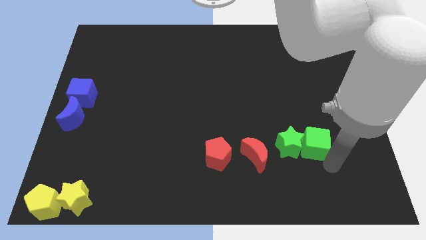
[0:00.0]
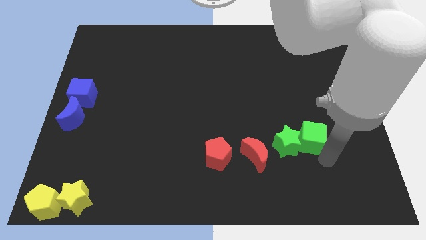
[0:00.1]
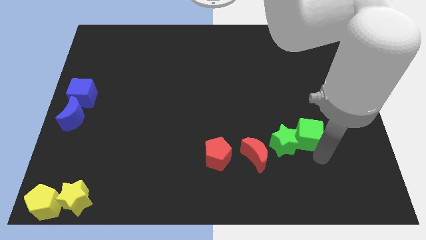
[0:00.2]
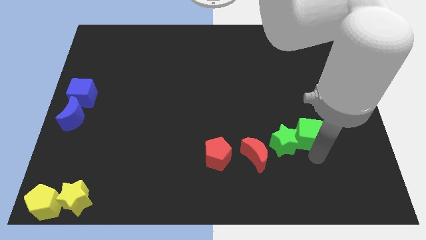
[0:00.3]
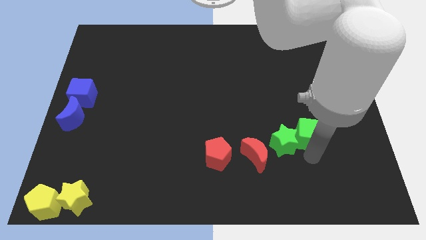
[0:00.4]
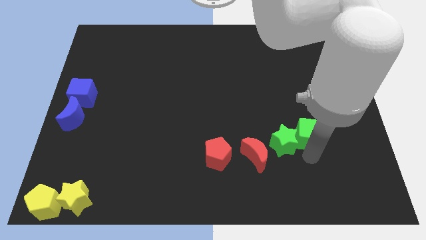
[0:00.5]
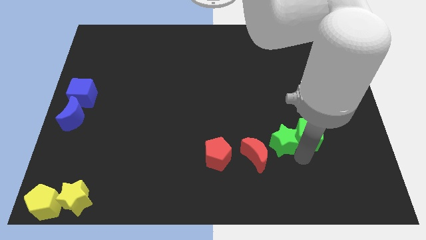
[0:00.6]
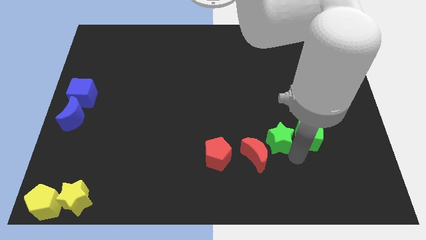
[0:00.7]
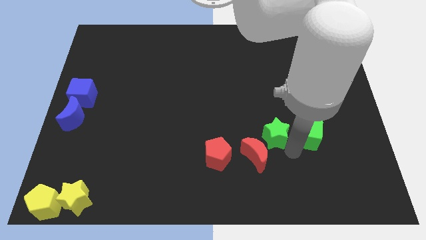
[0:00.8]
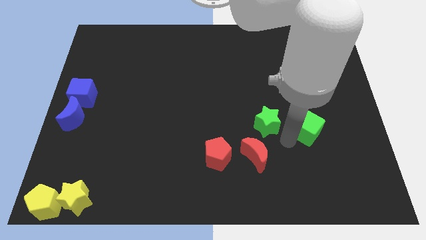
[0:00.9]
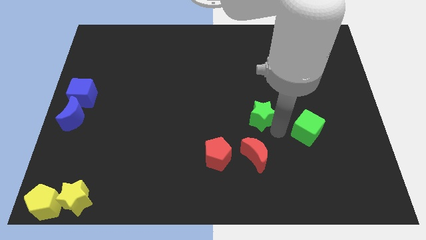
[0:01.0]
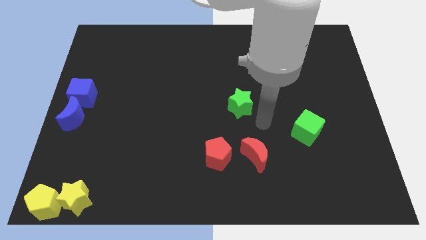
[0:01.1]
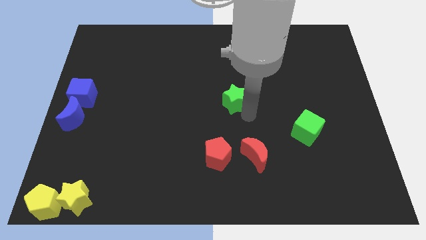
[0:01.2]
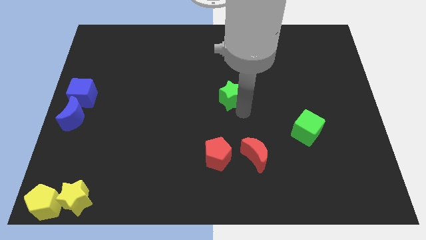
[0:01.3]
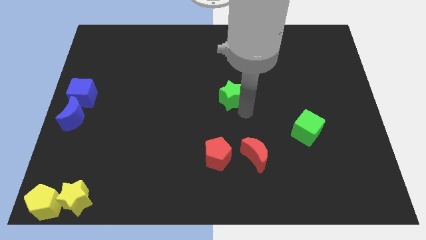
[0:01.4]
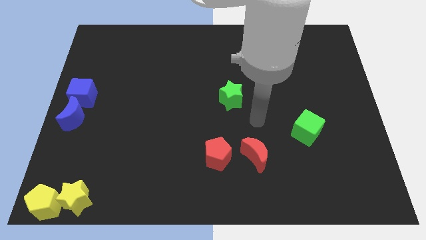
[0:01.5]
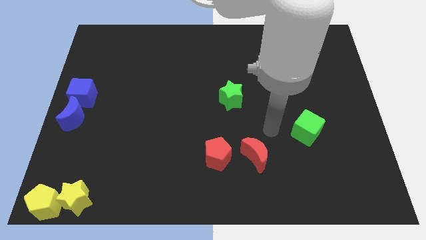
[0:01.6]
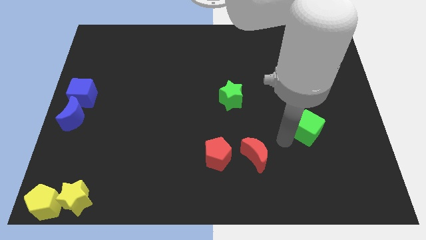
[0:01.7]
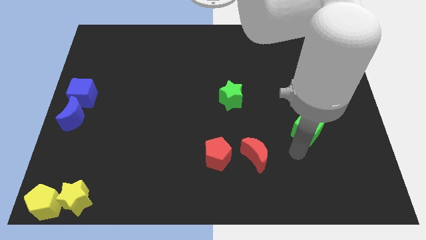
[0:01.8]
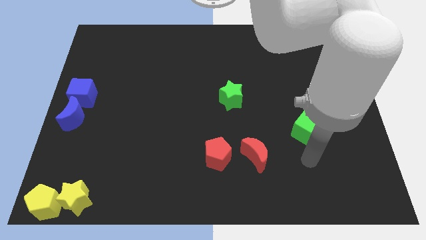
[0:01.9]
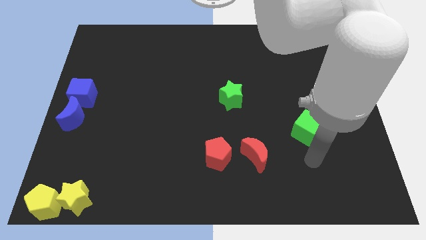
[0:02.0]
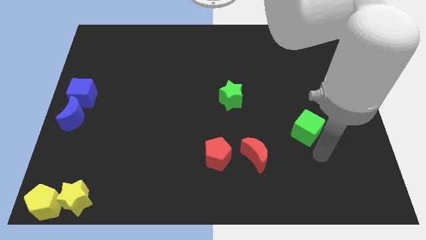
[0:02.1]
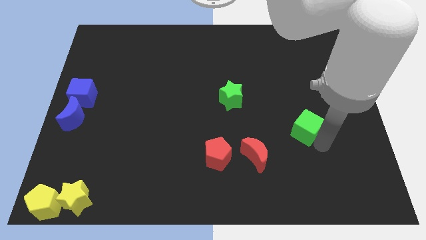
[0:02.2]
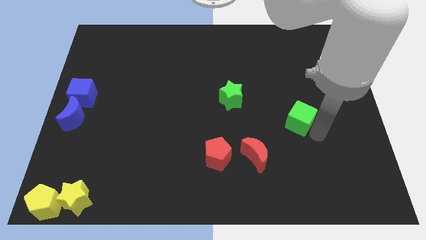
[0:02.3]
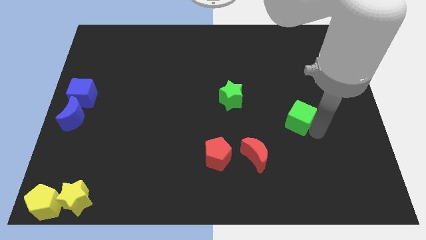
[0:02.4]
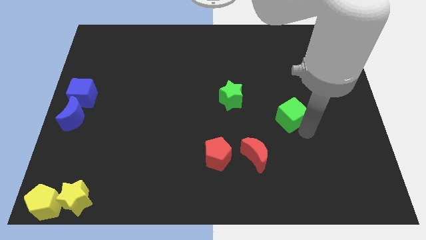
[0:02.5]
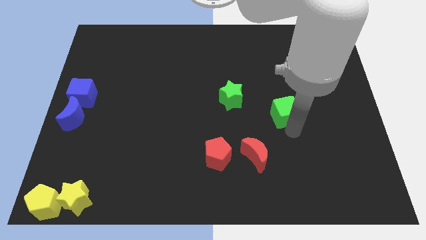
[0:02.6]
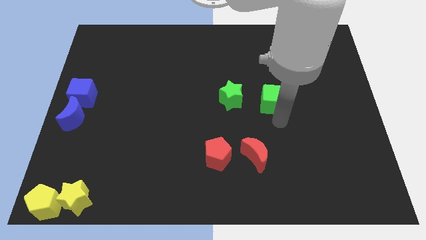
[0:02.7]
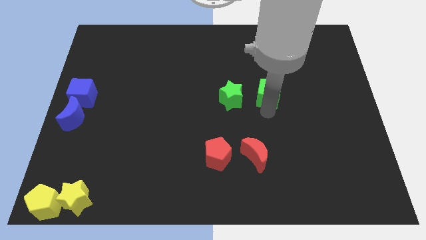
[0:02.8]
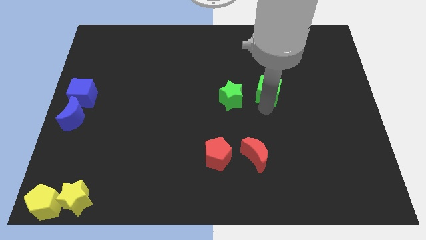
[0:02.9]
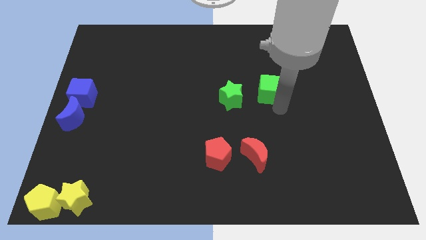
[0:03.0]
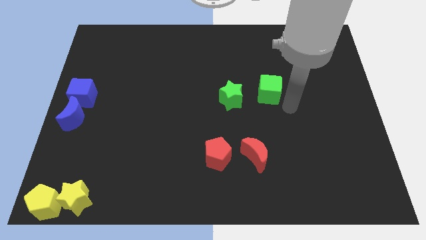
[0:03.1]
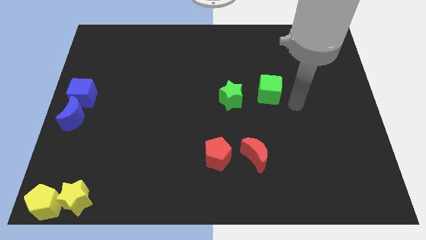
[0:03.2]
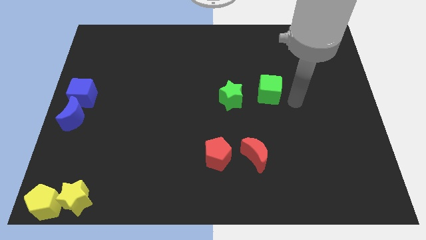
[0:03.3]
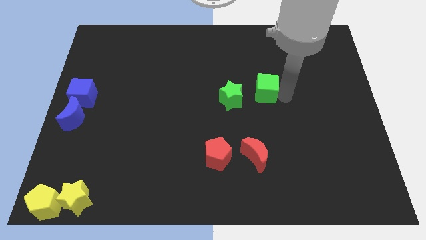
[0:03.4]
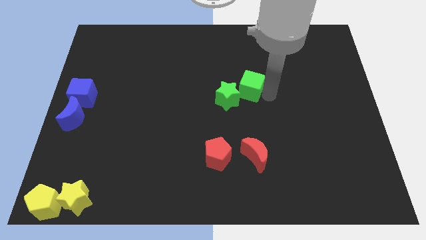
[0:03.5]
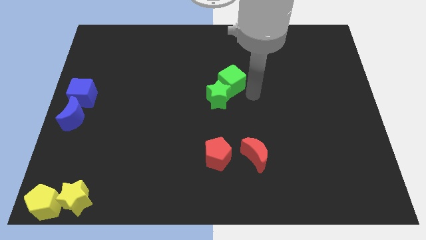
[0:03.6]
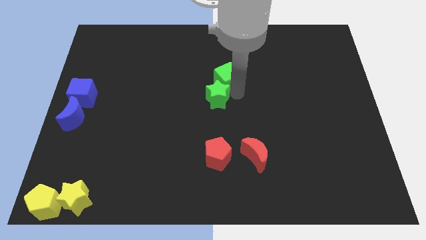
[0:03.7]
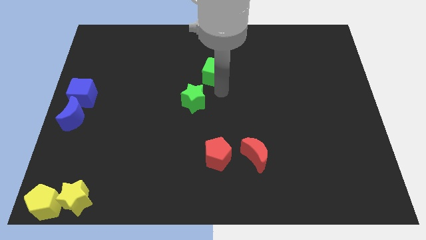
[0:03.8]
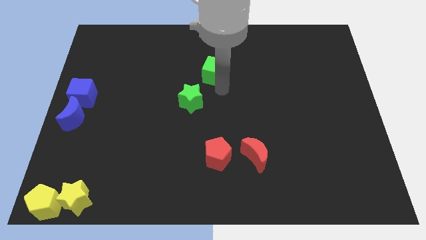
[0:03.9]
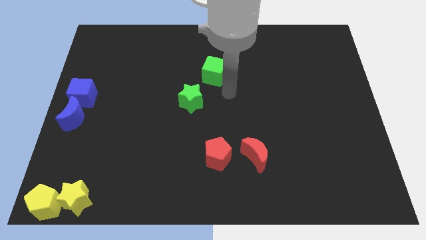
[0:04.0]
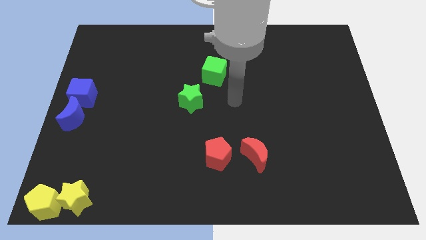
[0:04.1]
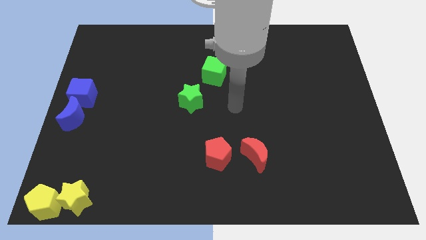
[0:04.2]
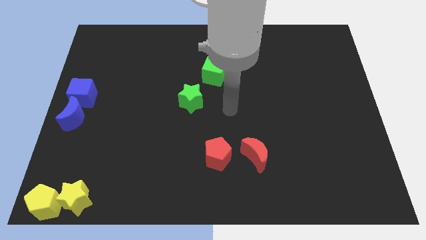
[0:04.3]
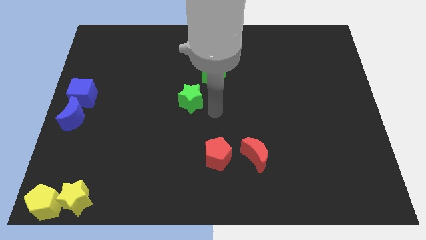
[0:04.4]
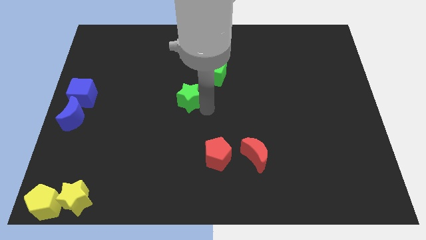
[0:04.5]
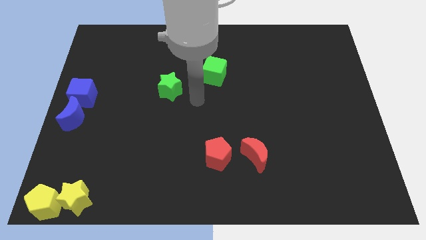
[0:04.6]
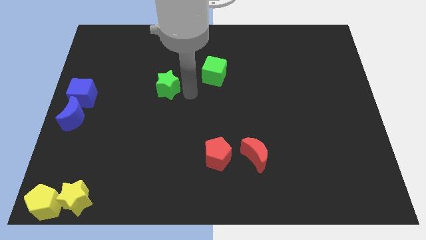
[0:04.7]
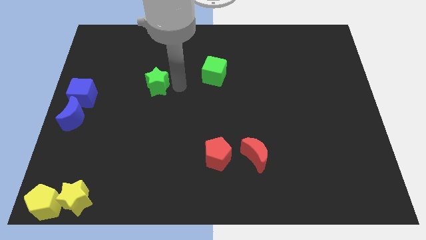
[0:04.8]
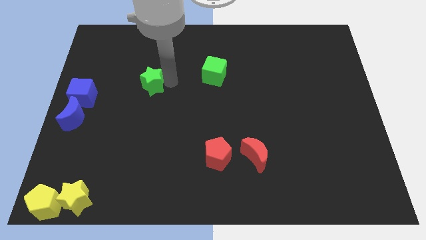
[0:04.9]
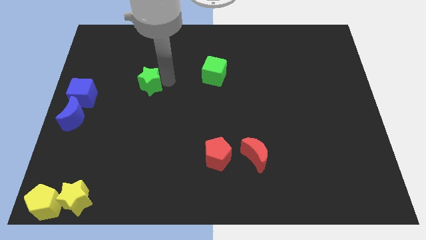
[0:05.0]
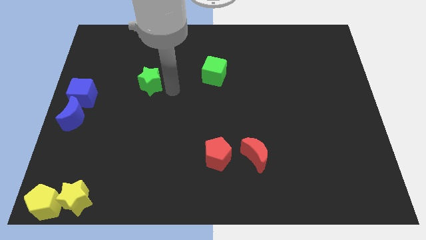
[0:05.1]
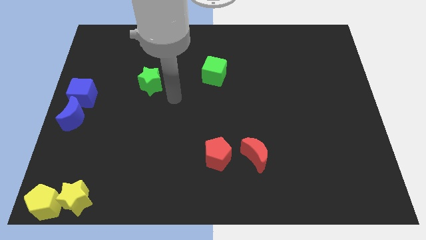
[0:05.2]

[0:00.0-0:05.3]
place the green cube above the red pentagon

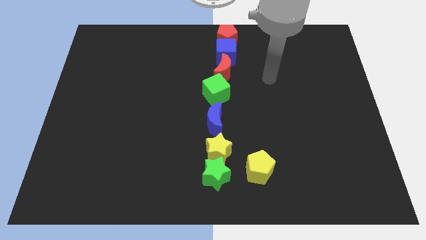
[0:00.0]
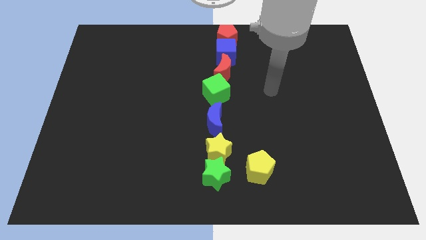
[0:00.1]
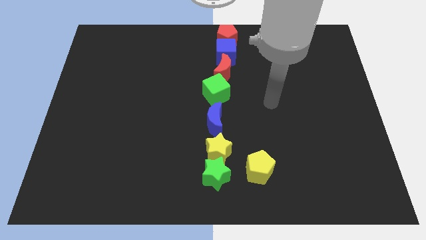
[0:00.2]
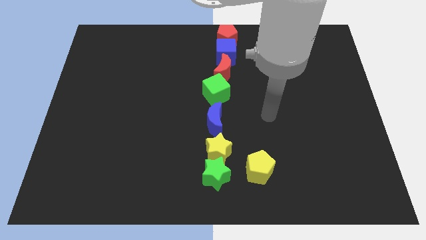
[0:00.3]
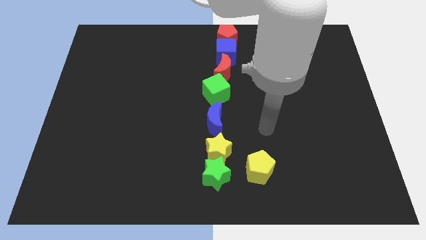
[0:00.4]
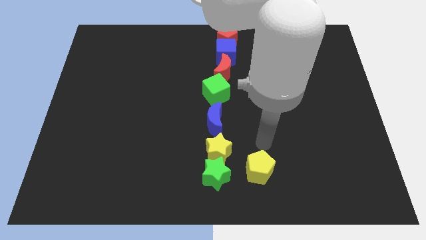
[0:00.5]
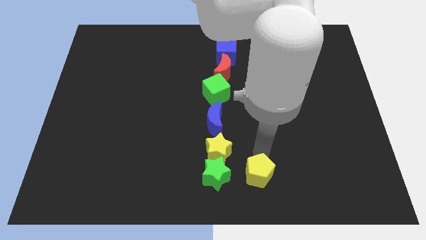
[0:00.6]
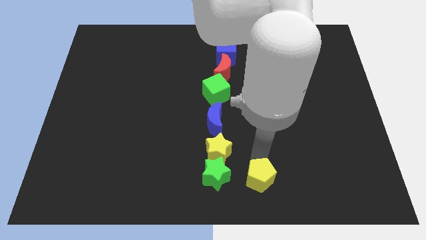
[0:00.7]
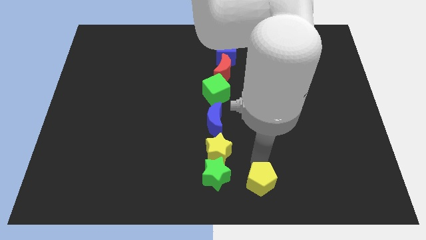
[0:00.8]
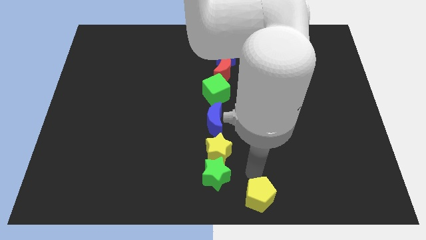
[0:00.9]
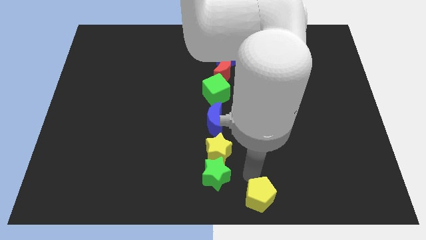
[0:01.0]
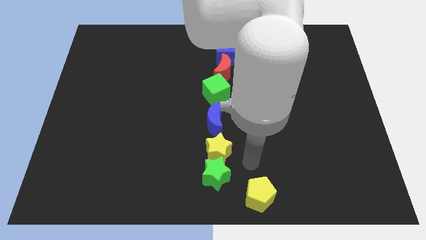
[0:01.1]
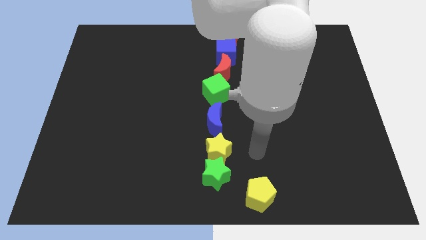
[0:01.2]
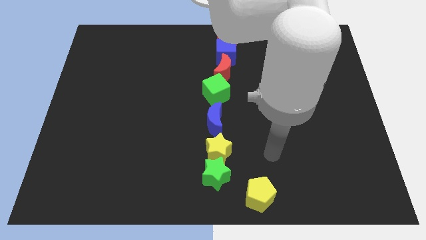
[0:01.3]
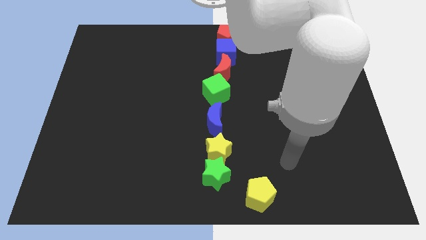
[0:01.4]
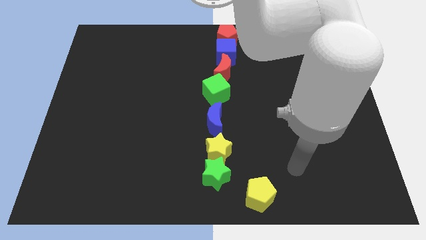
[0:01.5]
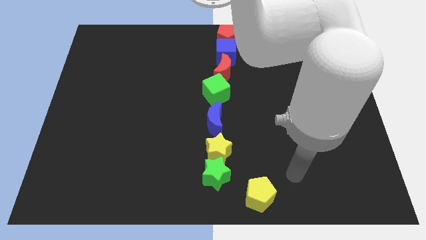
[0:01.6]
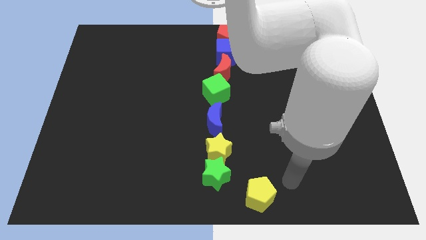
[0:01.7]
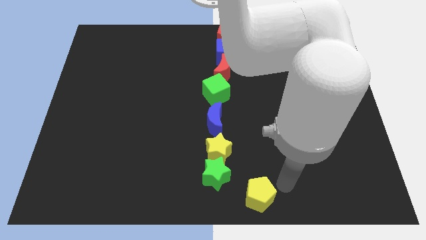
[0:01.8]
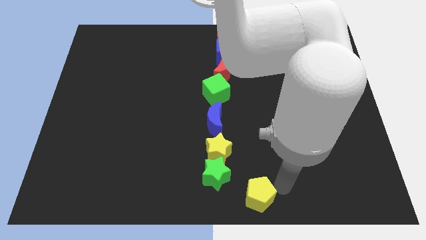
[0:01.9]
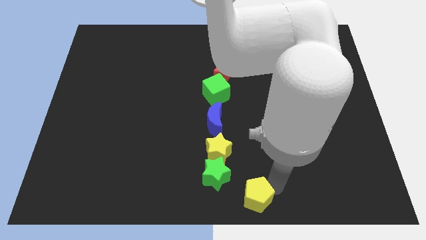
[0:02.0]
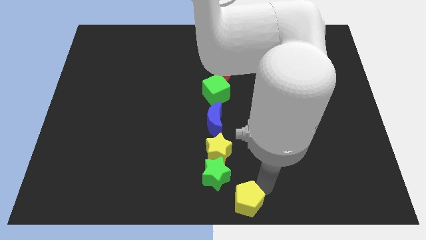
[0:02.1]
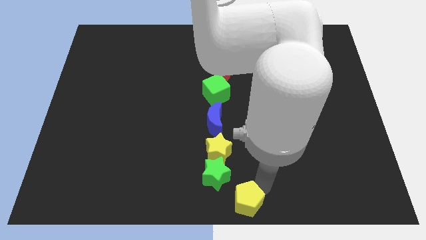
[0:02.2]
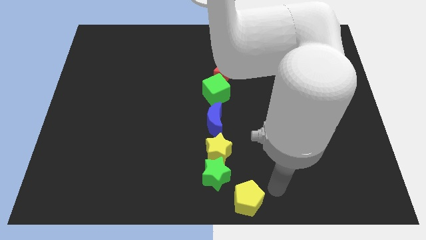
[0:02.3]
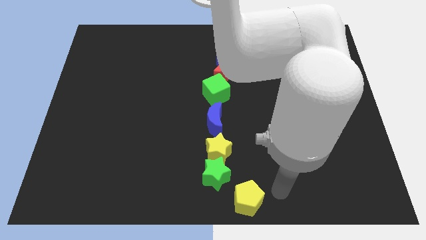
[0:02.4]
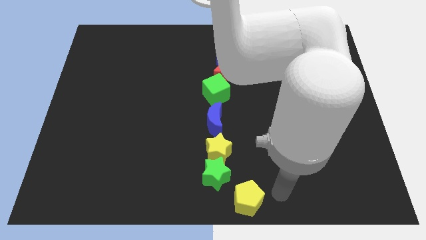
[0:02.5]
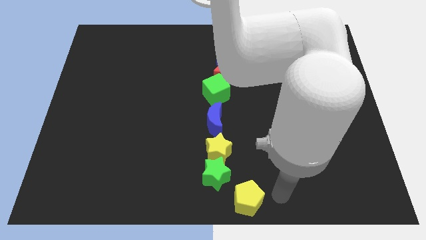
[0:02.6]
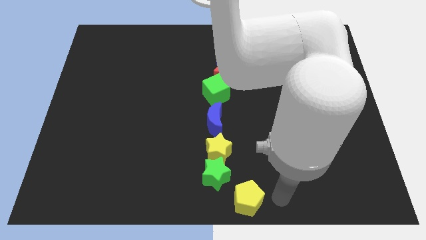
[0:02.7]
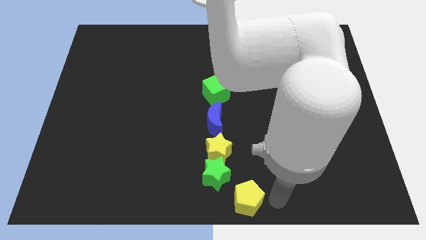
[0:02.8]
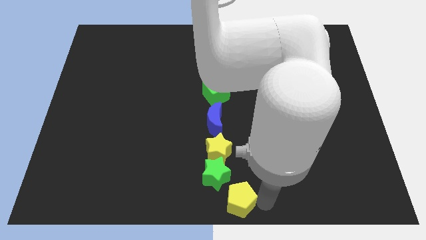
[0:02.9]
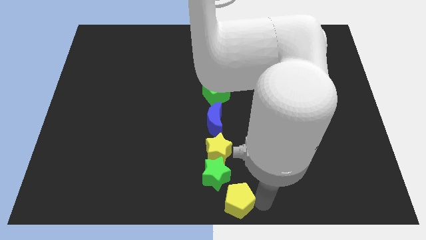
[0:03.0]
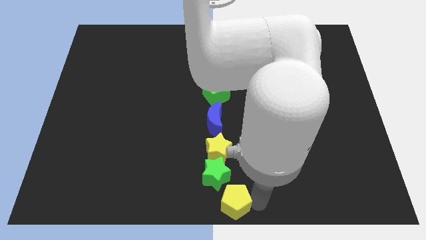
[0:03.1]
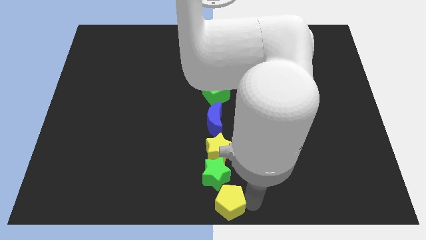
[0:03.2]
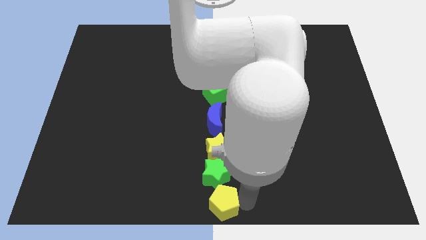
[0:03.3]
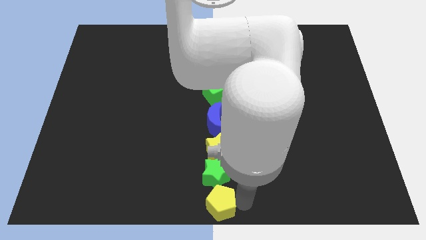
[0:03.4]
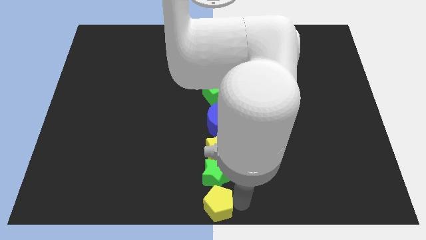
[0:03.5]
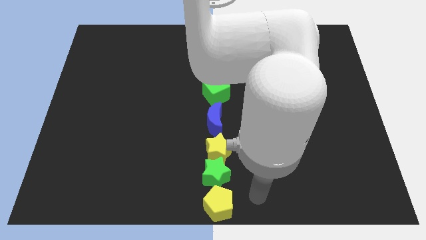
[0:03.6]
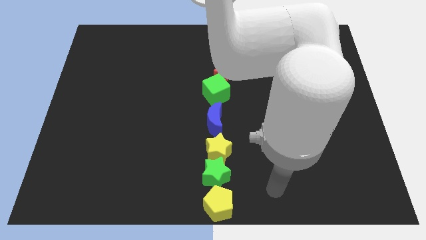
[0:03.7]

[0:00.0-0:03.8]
slide the yellow pentagon towards the bottom center
